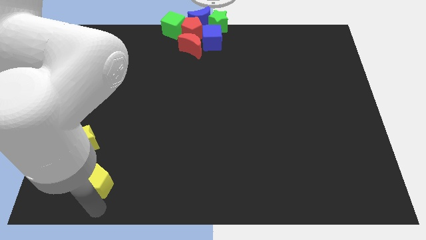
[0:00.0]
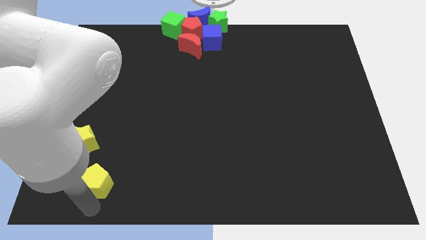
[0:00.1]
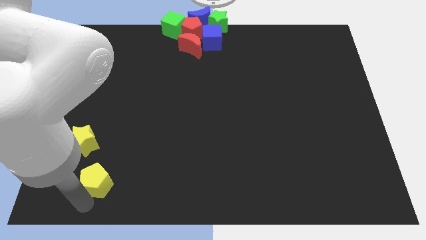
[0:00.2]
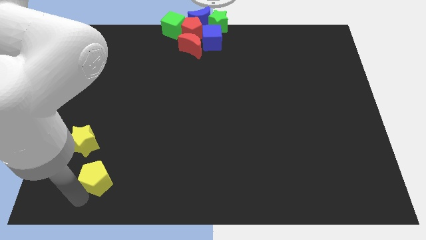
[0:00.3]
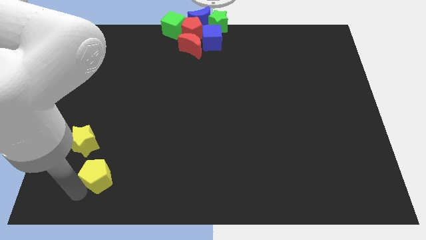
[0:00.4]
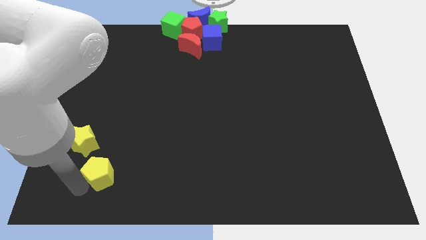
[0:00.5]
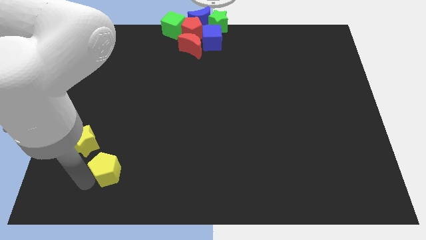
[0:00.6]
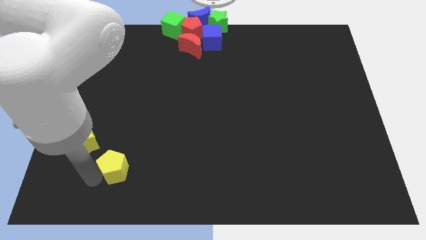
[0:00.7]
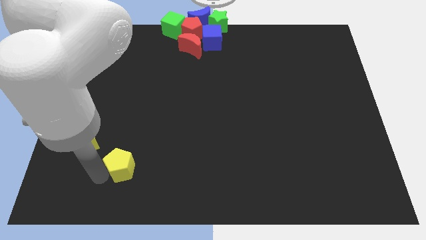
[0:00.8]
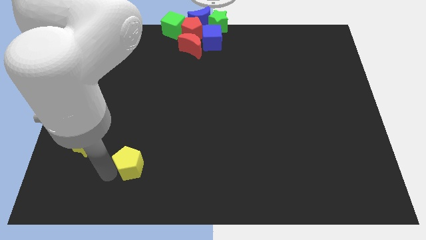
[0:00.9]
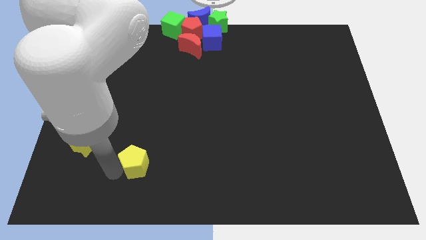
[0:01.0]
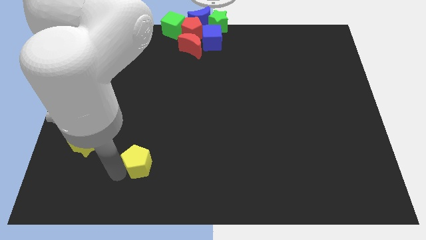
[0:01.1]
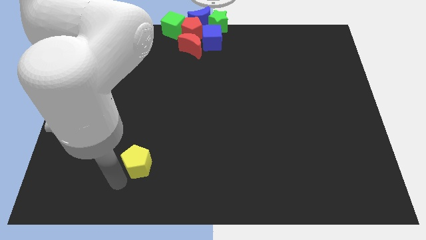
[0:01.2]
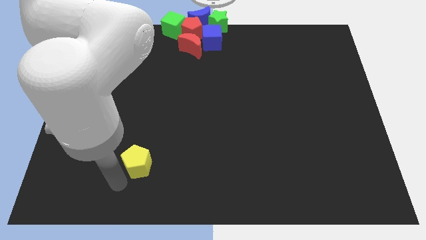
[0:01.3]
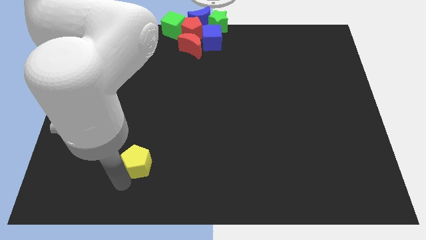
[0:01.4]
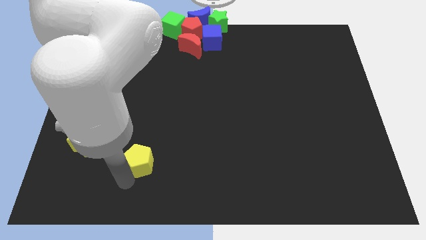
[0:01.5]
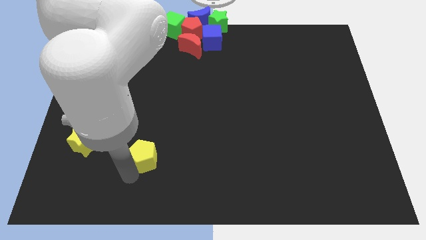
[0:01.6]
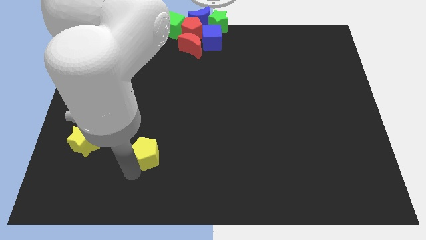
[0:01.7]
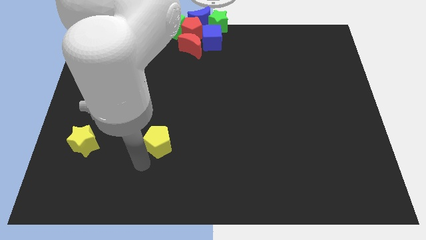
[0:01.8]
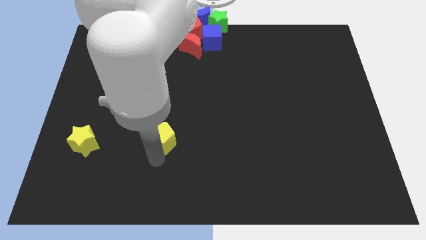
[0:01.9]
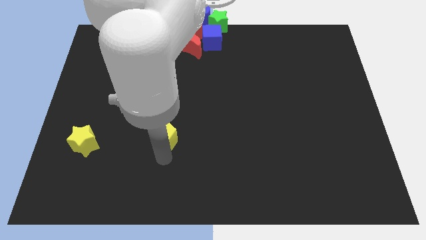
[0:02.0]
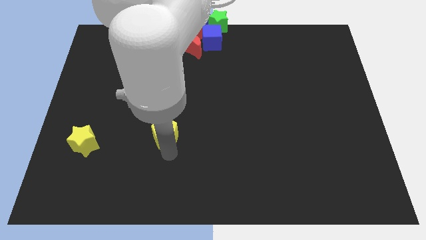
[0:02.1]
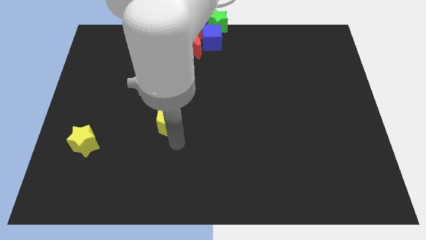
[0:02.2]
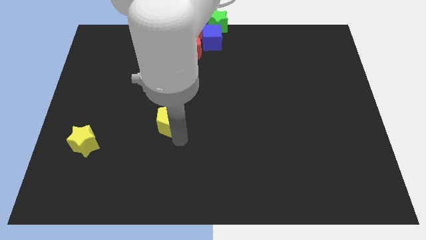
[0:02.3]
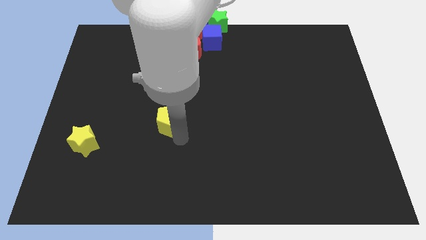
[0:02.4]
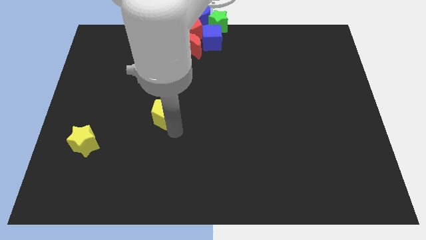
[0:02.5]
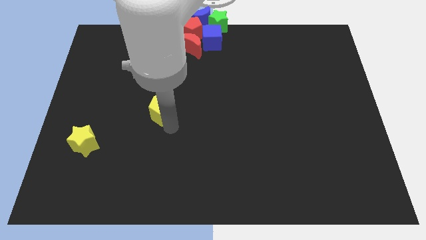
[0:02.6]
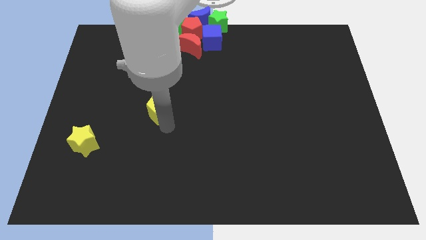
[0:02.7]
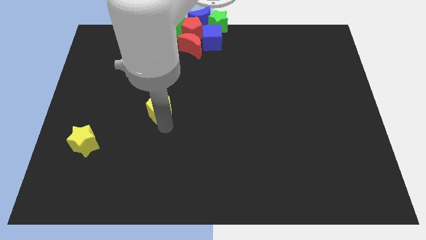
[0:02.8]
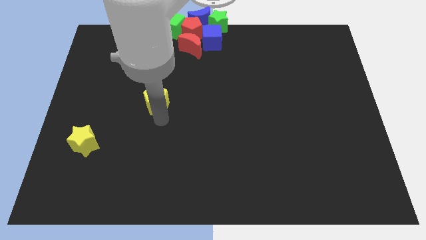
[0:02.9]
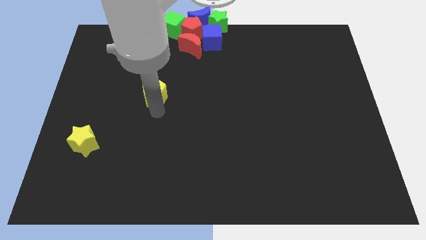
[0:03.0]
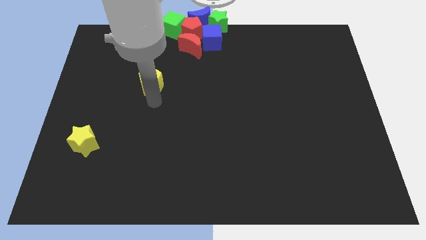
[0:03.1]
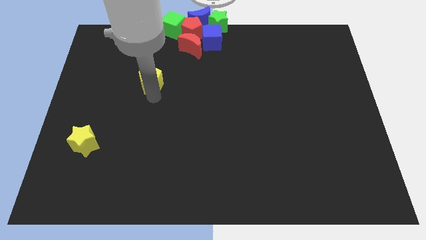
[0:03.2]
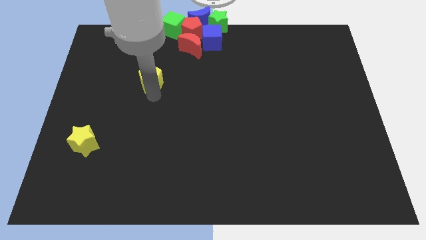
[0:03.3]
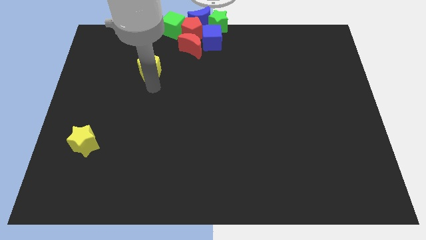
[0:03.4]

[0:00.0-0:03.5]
place the yellow pentagon bottom left to the moon

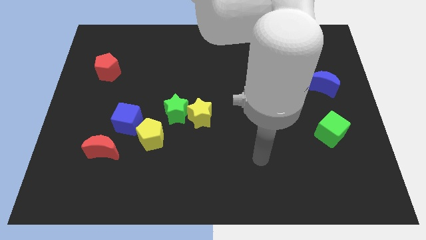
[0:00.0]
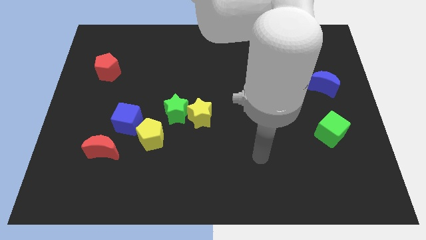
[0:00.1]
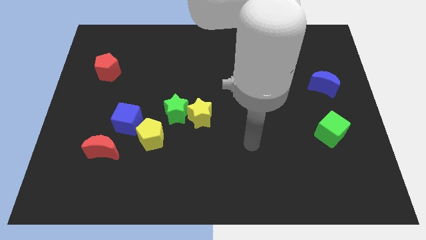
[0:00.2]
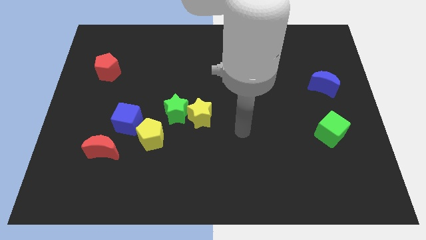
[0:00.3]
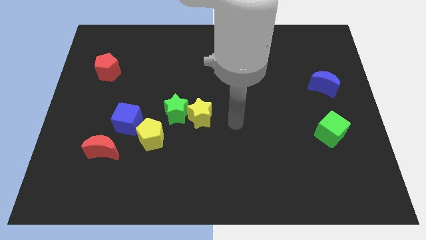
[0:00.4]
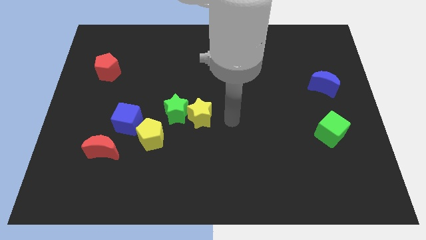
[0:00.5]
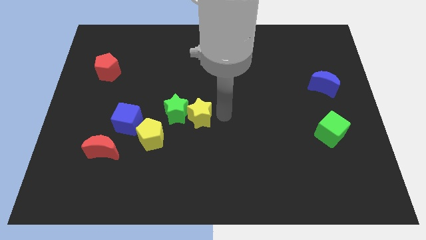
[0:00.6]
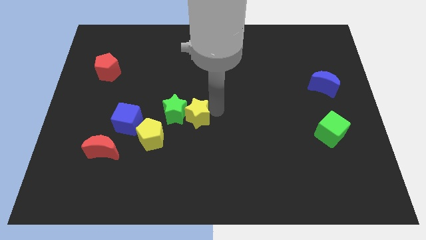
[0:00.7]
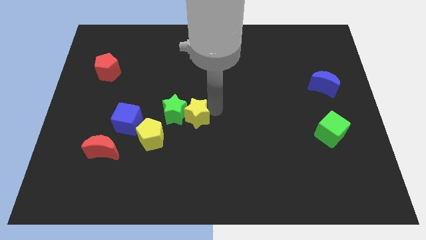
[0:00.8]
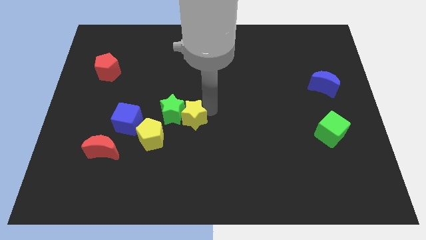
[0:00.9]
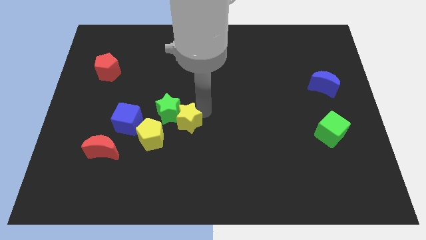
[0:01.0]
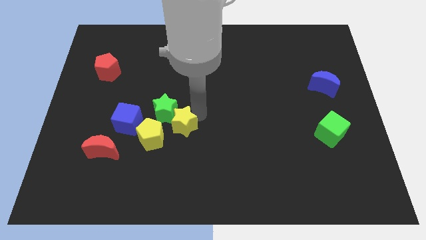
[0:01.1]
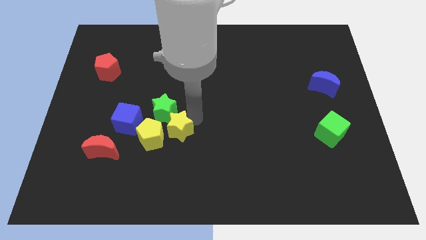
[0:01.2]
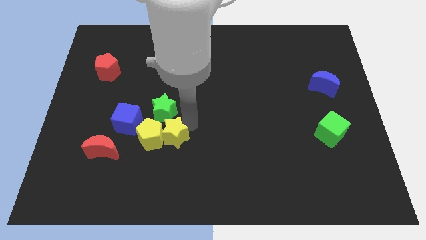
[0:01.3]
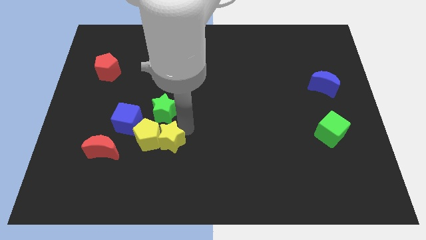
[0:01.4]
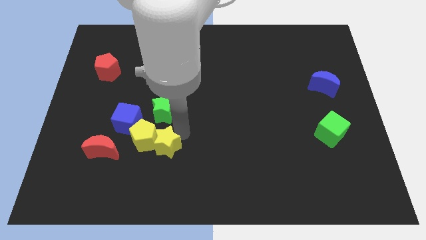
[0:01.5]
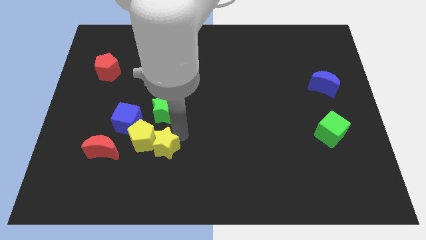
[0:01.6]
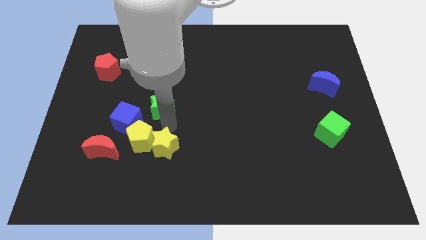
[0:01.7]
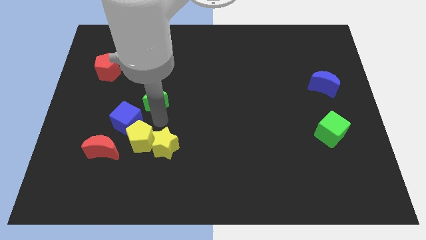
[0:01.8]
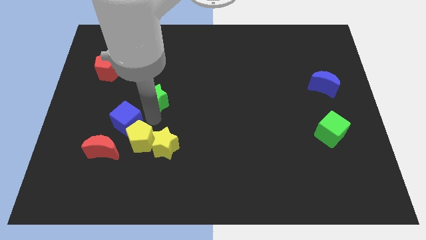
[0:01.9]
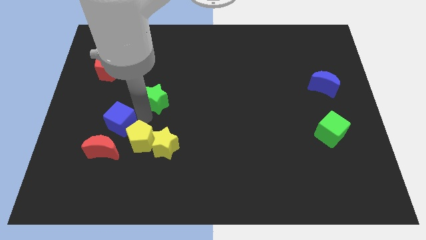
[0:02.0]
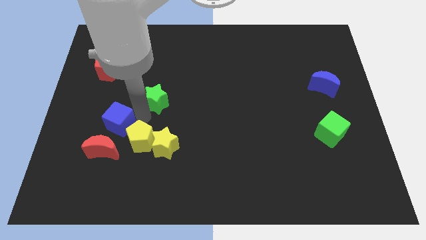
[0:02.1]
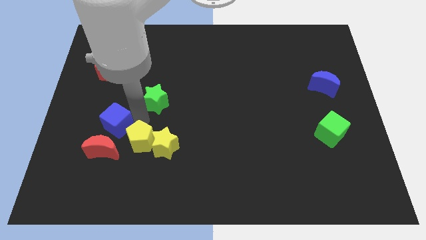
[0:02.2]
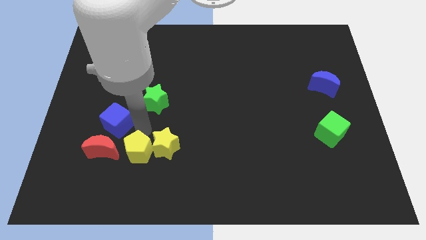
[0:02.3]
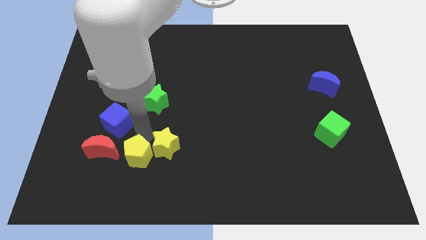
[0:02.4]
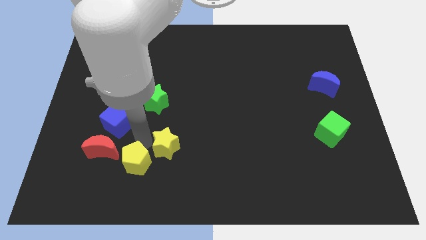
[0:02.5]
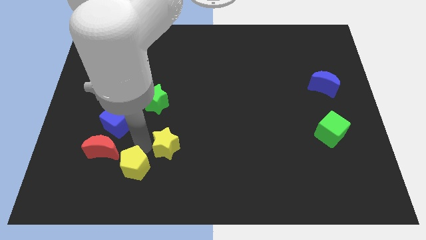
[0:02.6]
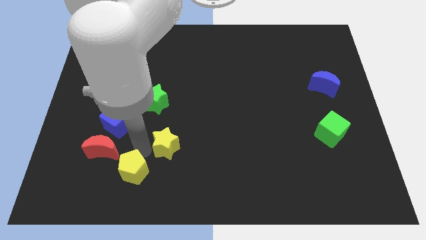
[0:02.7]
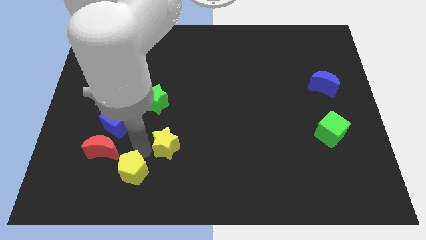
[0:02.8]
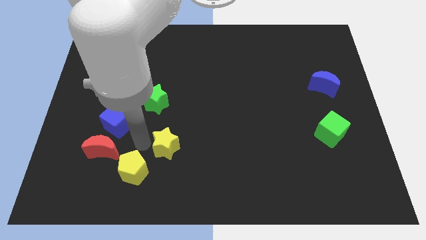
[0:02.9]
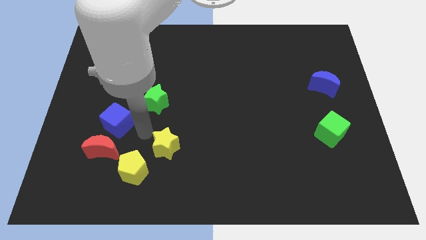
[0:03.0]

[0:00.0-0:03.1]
push the yellow pentagon and yellow star slightly to the bottom

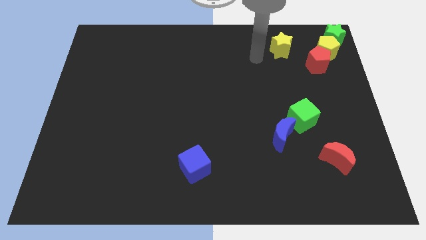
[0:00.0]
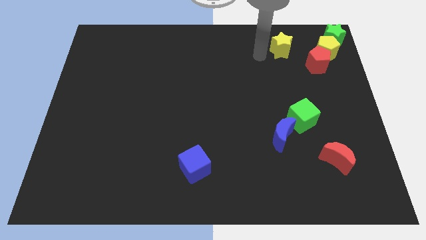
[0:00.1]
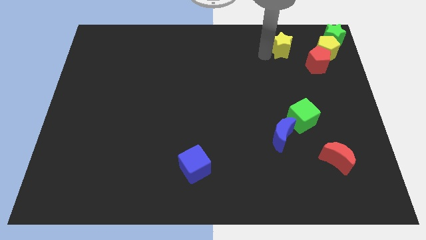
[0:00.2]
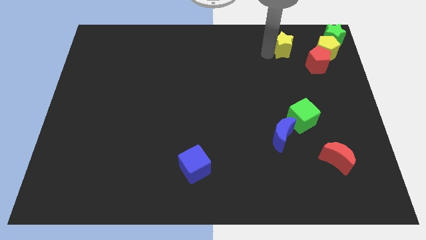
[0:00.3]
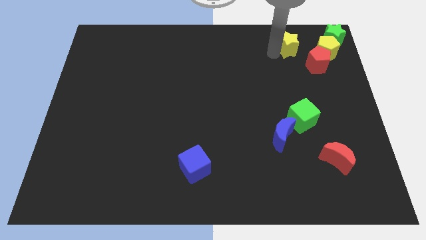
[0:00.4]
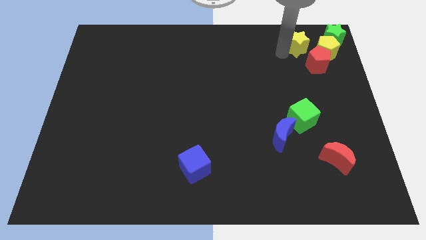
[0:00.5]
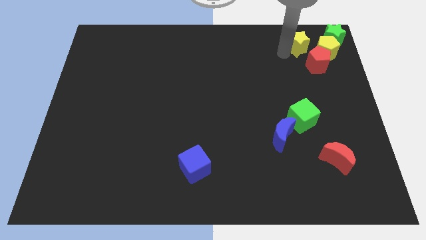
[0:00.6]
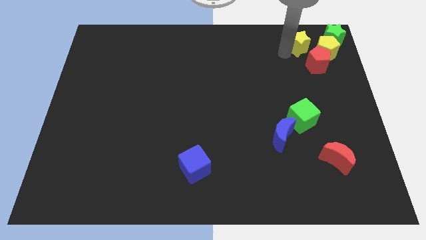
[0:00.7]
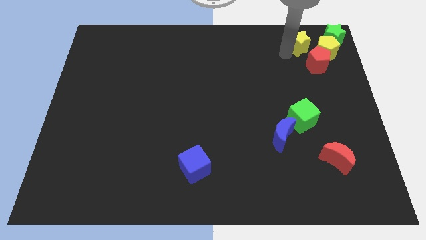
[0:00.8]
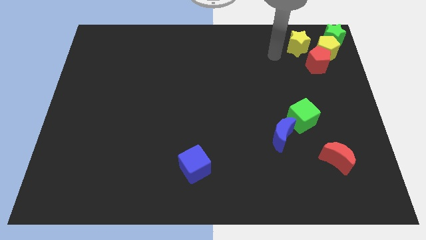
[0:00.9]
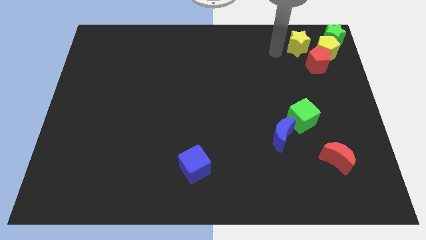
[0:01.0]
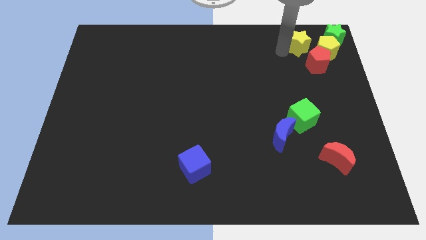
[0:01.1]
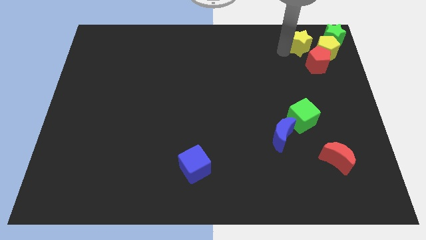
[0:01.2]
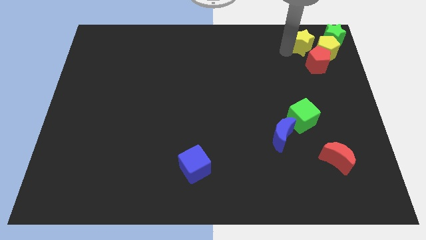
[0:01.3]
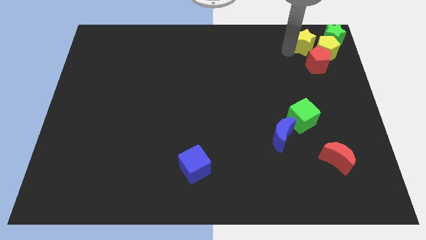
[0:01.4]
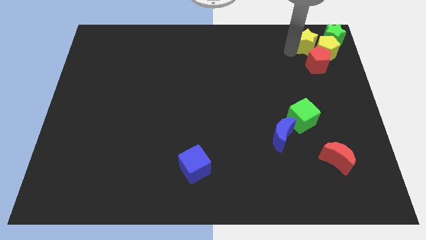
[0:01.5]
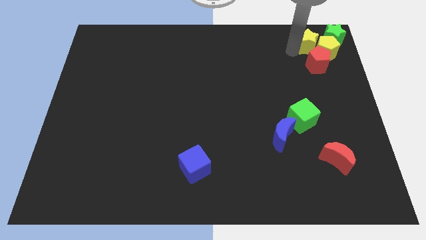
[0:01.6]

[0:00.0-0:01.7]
move the yellow star close to the yellow pentagon

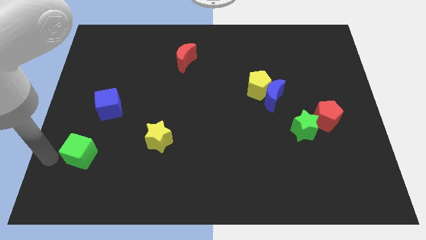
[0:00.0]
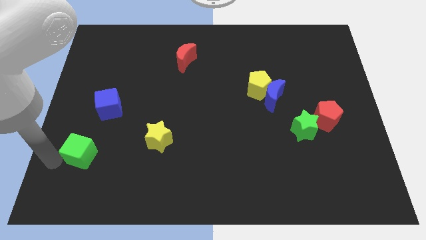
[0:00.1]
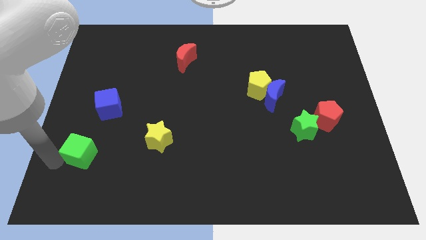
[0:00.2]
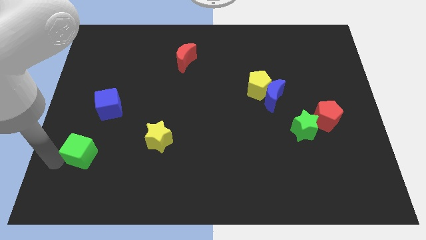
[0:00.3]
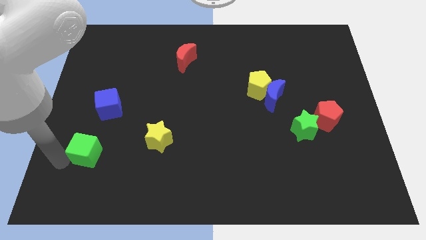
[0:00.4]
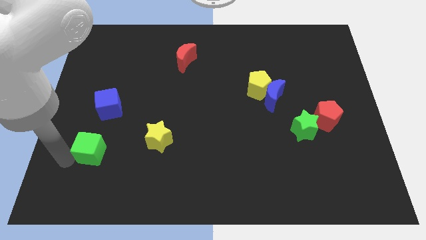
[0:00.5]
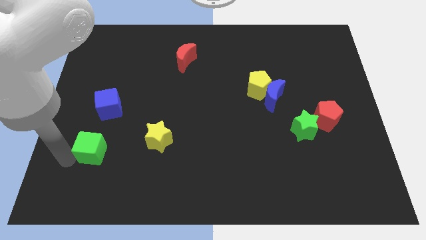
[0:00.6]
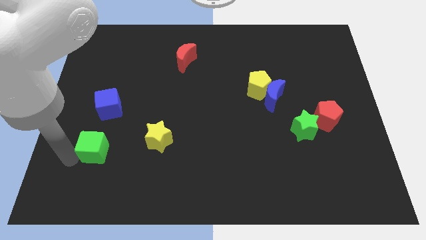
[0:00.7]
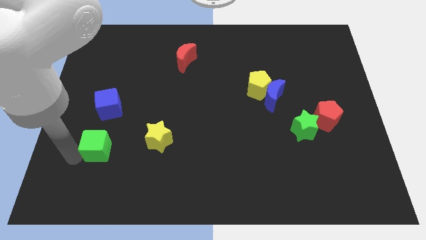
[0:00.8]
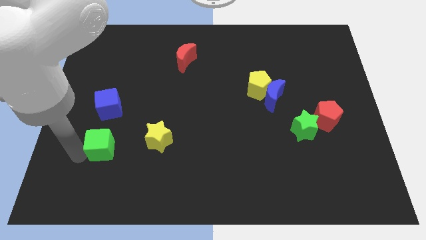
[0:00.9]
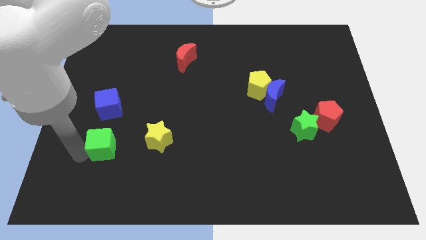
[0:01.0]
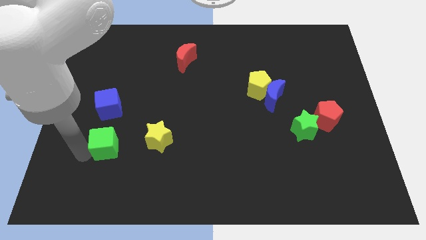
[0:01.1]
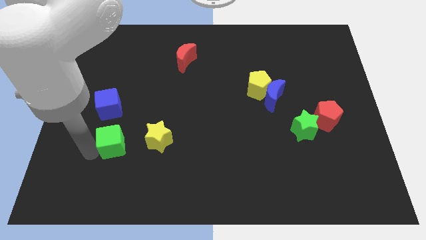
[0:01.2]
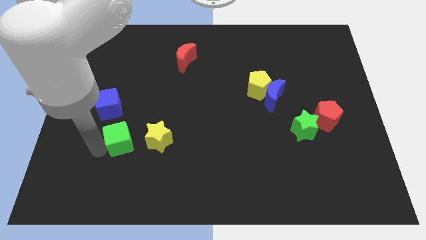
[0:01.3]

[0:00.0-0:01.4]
place the green cube below the blue cube
